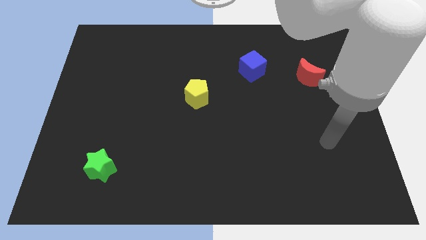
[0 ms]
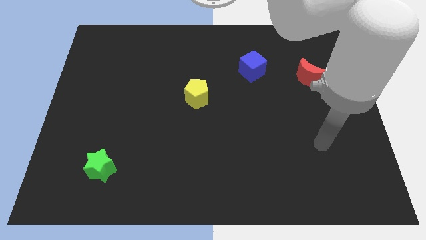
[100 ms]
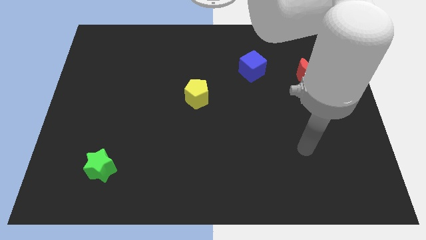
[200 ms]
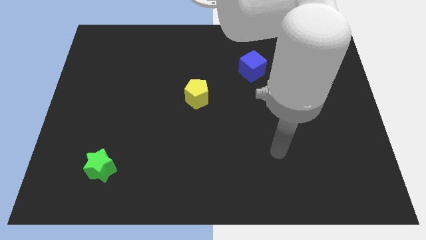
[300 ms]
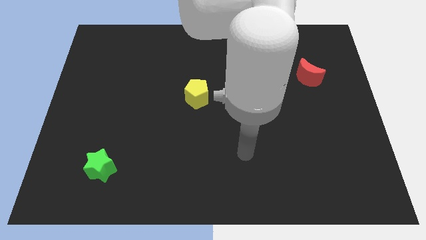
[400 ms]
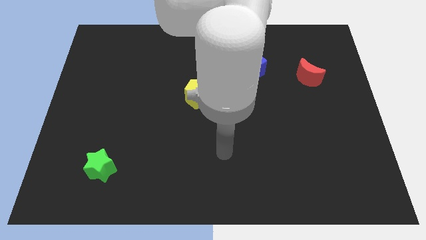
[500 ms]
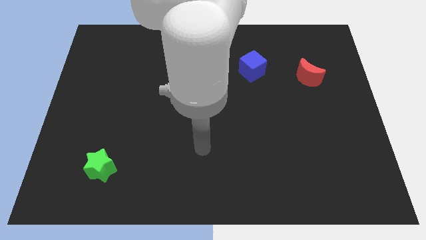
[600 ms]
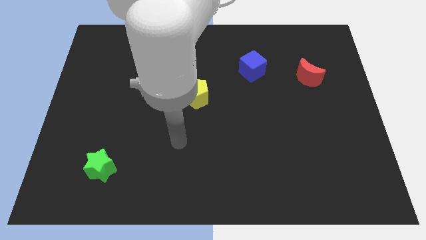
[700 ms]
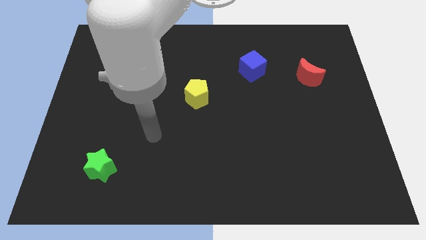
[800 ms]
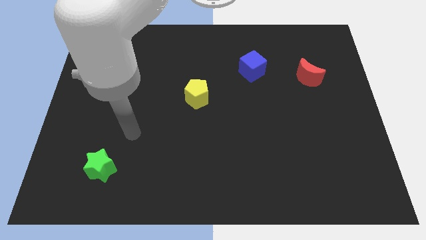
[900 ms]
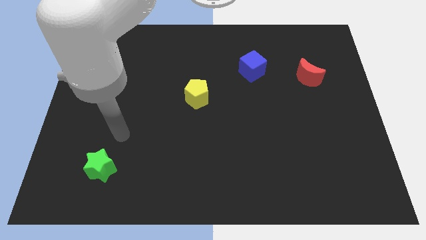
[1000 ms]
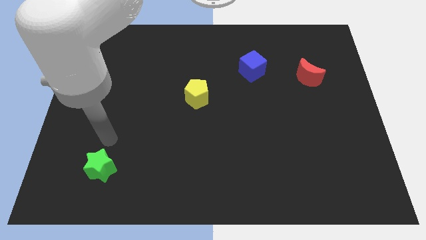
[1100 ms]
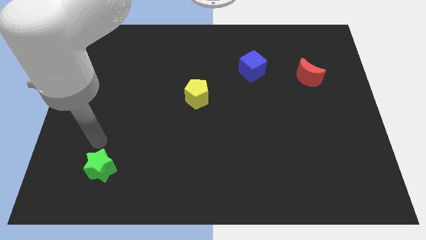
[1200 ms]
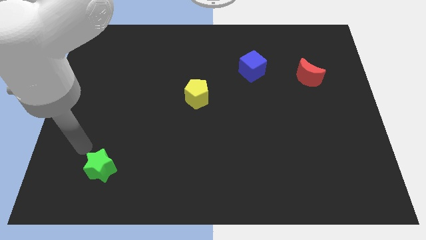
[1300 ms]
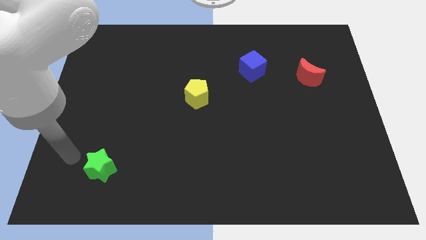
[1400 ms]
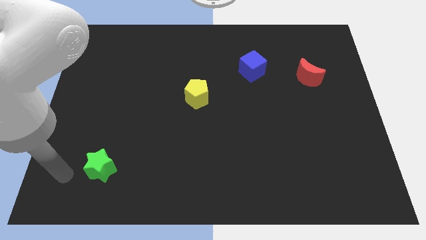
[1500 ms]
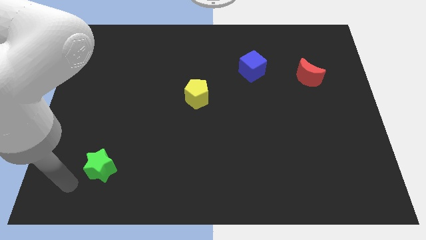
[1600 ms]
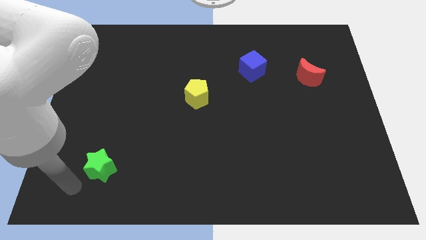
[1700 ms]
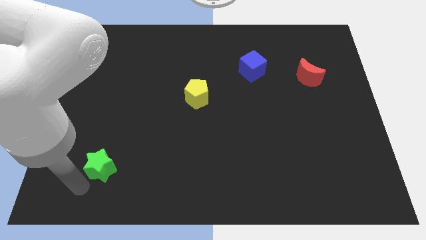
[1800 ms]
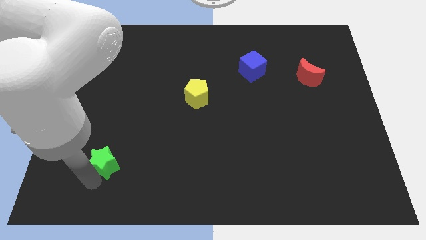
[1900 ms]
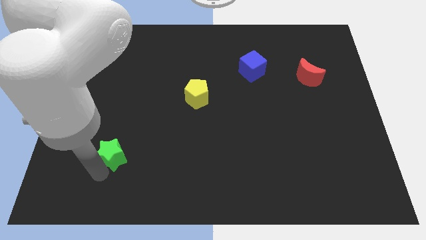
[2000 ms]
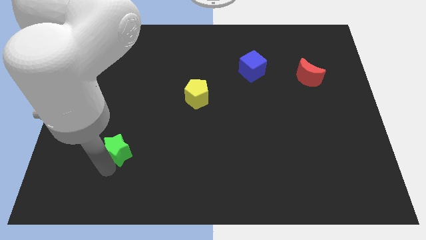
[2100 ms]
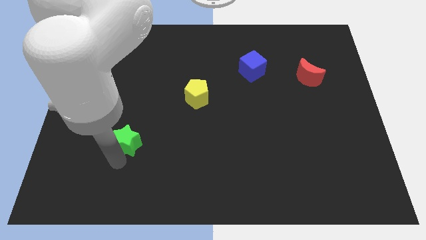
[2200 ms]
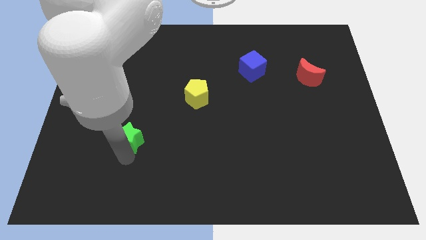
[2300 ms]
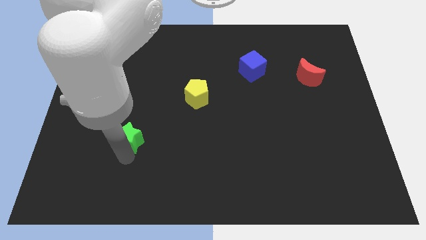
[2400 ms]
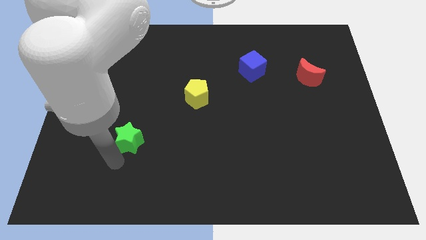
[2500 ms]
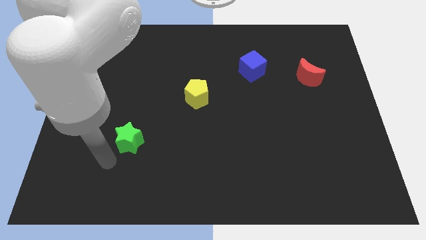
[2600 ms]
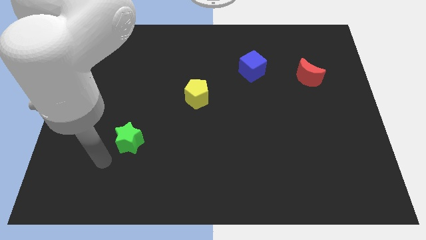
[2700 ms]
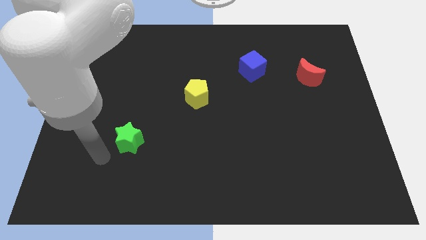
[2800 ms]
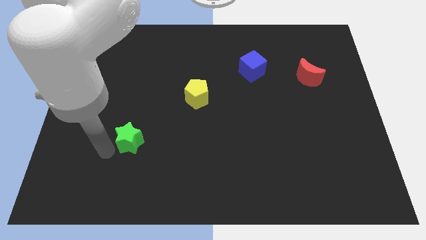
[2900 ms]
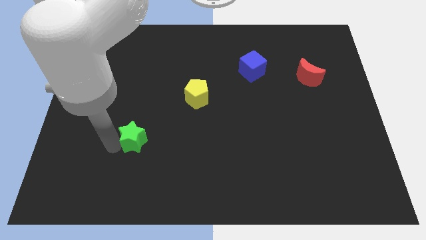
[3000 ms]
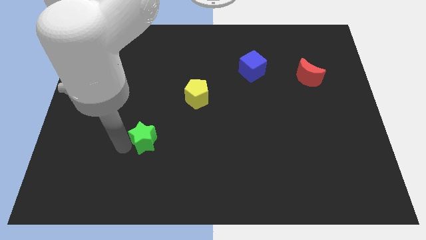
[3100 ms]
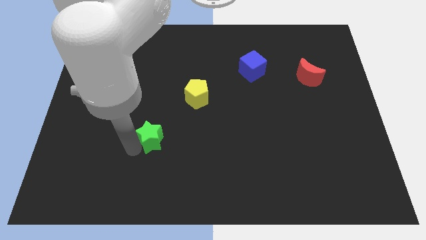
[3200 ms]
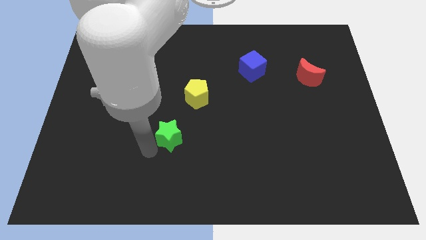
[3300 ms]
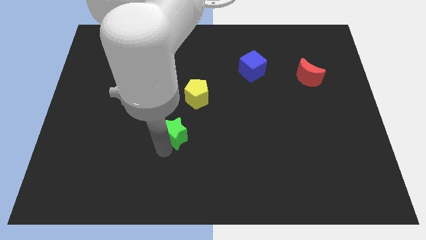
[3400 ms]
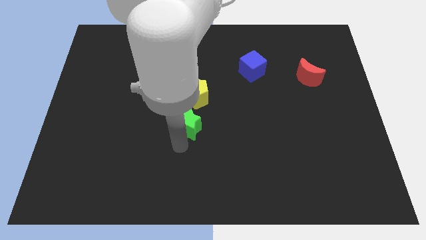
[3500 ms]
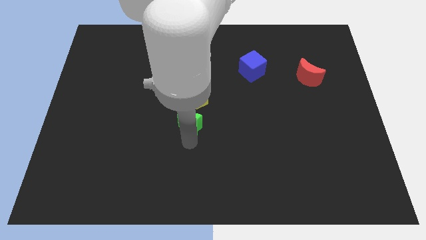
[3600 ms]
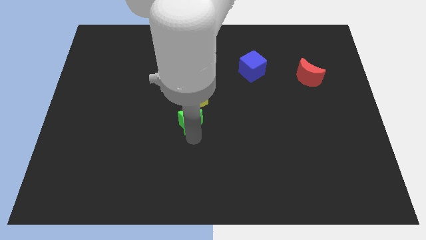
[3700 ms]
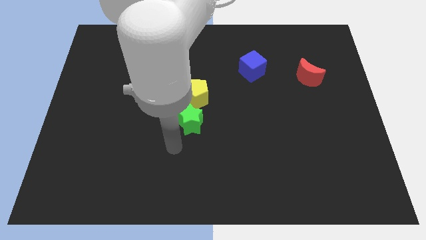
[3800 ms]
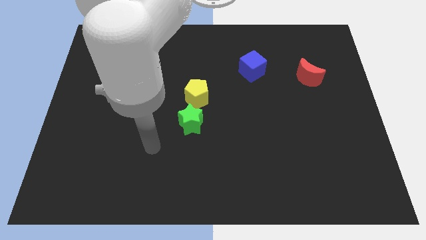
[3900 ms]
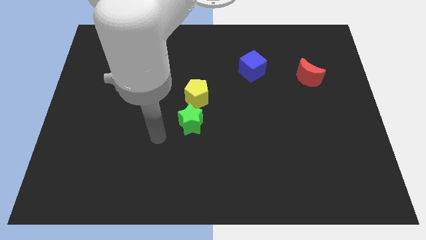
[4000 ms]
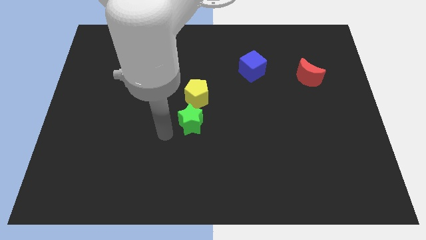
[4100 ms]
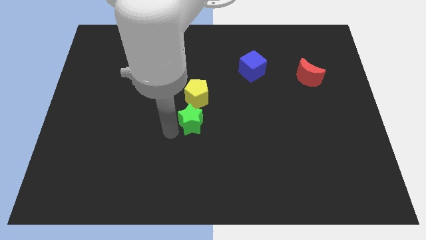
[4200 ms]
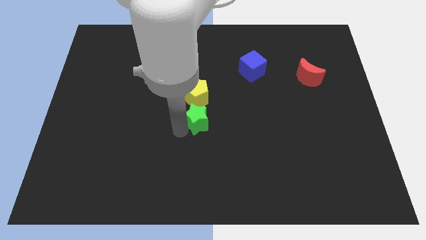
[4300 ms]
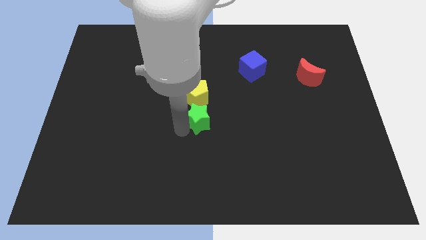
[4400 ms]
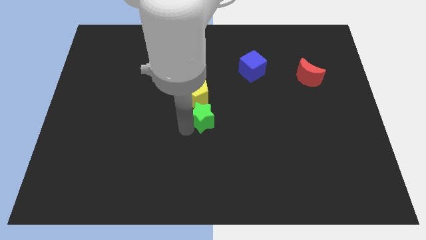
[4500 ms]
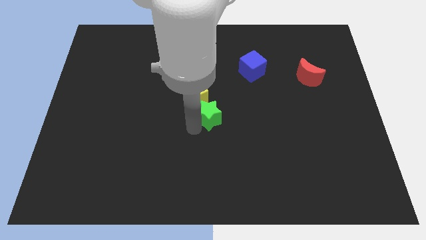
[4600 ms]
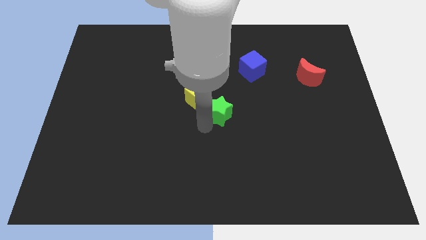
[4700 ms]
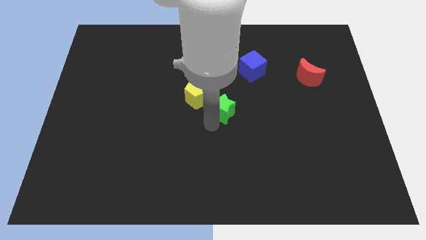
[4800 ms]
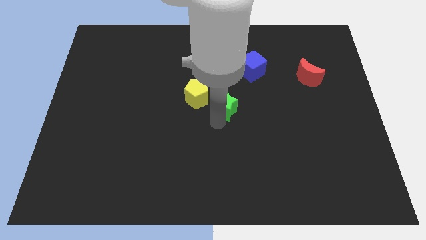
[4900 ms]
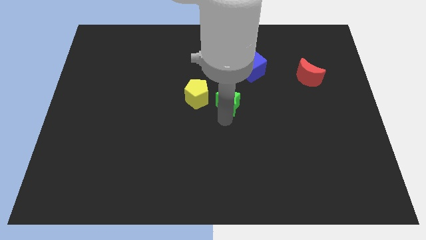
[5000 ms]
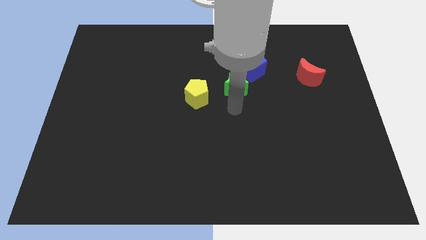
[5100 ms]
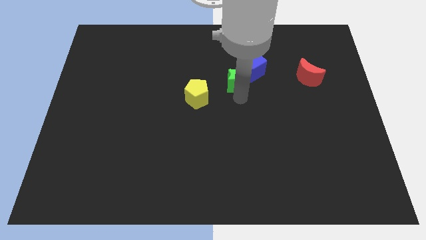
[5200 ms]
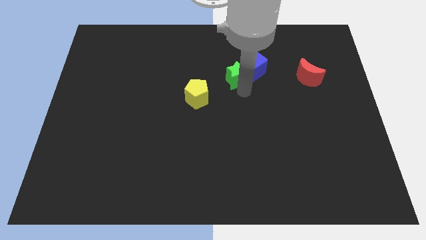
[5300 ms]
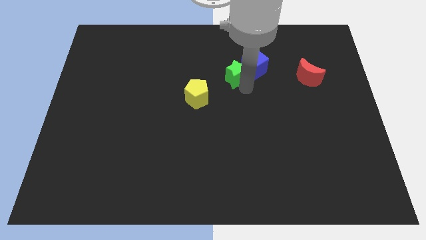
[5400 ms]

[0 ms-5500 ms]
push the green block close to the cube

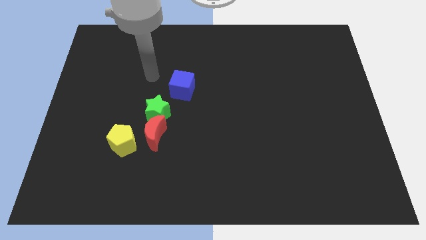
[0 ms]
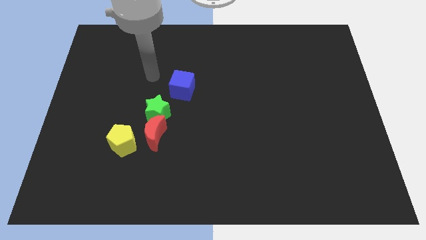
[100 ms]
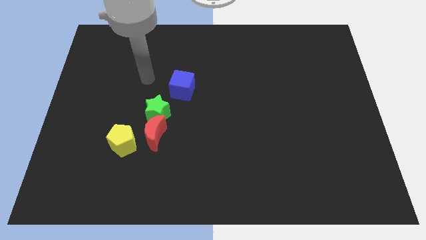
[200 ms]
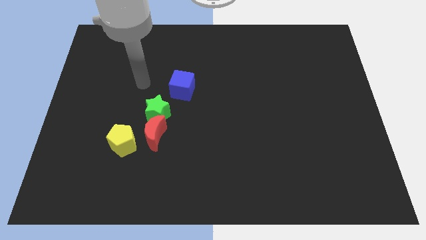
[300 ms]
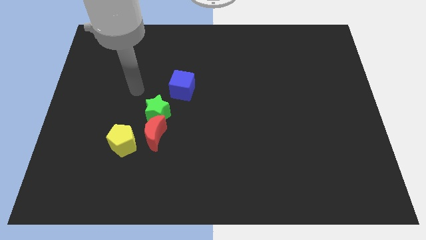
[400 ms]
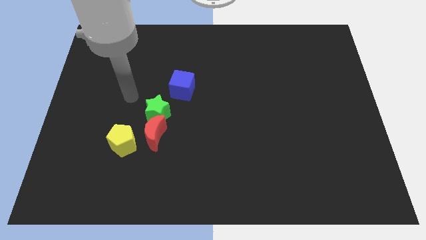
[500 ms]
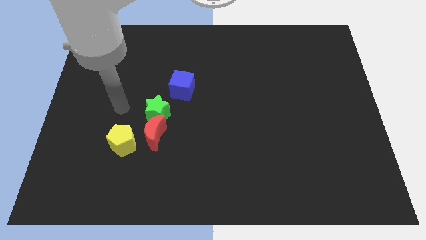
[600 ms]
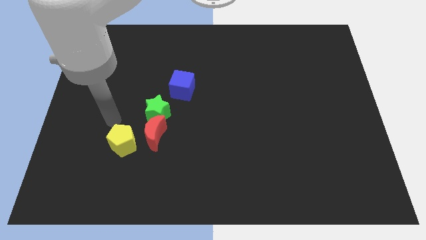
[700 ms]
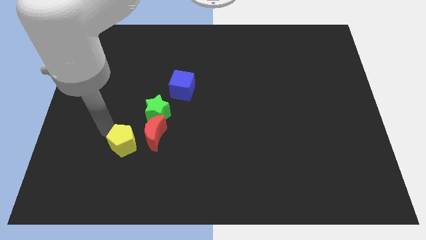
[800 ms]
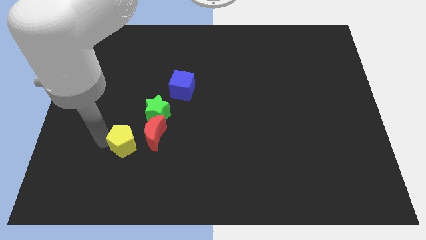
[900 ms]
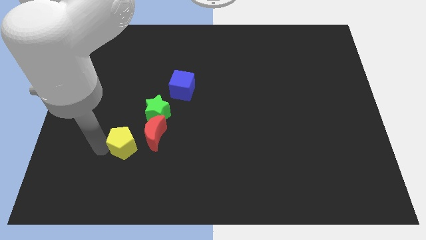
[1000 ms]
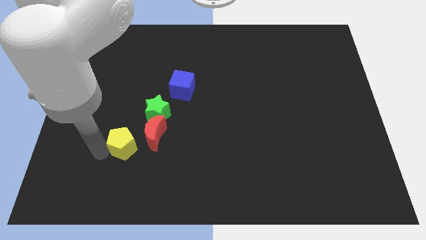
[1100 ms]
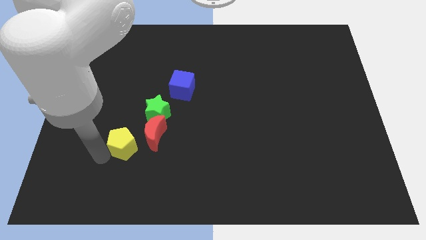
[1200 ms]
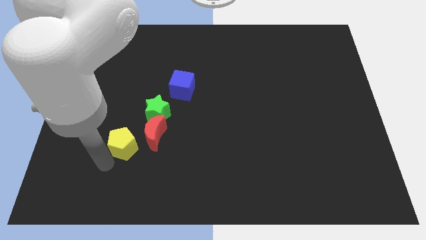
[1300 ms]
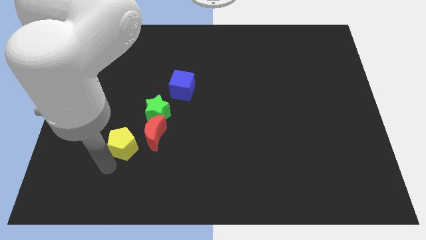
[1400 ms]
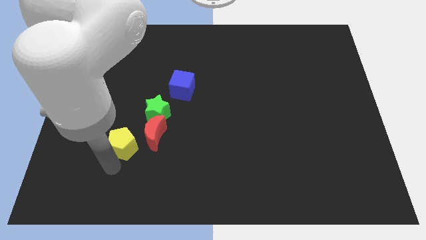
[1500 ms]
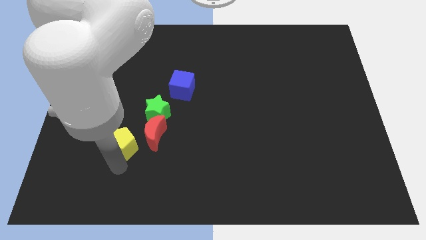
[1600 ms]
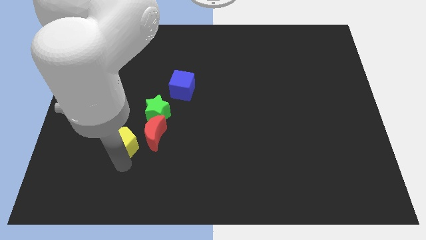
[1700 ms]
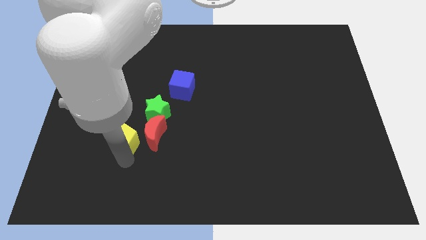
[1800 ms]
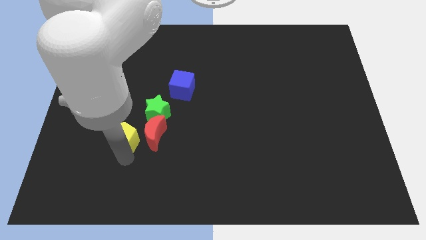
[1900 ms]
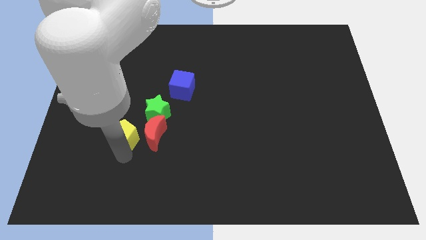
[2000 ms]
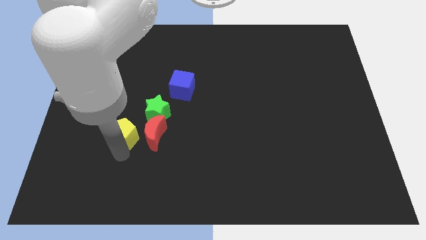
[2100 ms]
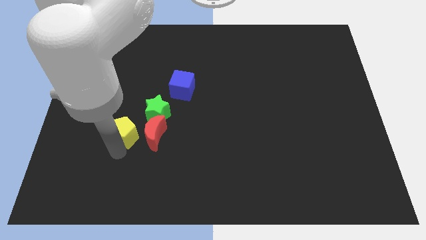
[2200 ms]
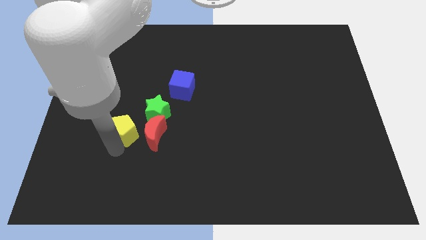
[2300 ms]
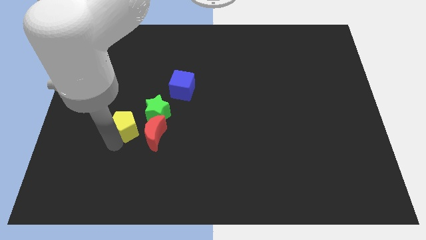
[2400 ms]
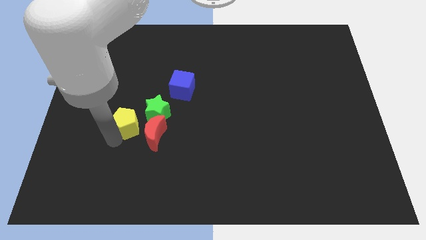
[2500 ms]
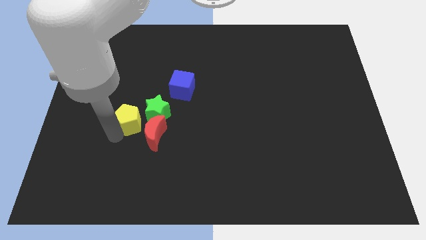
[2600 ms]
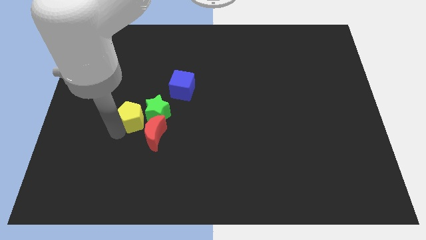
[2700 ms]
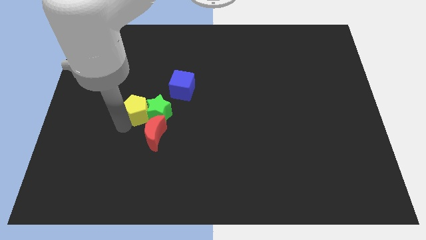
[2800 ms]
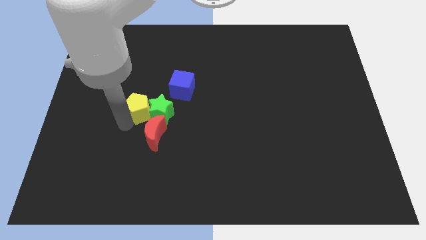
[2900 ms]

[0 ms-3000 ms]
slide the pentagon towards the star
